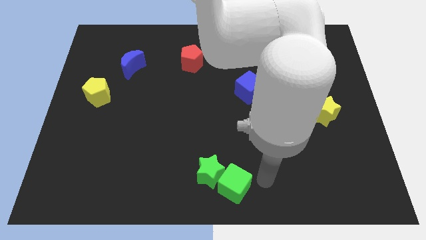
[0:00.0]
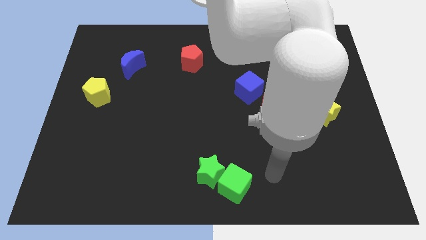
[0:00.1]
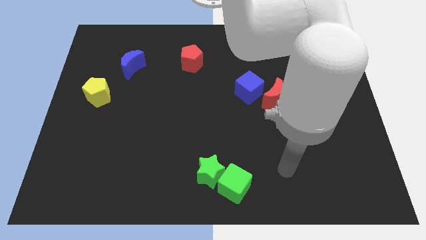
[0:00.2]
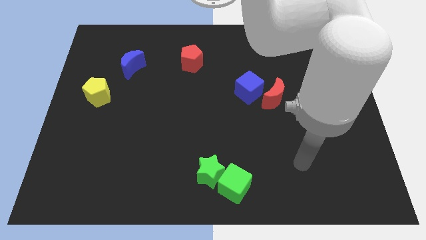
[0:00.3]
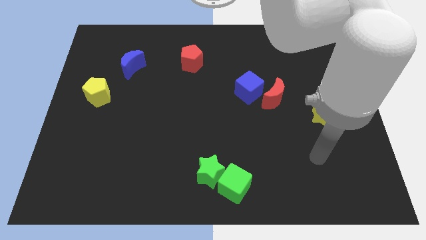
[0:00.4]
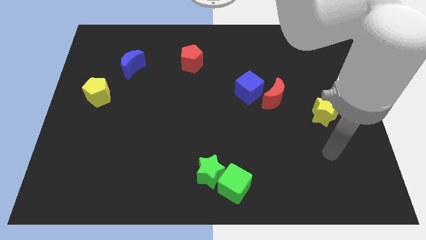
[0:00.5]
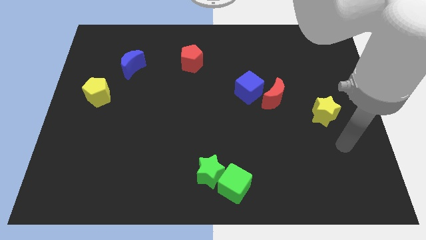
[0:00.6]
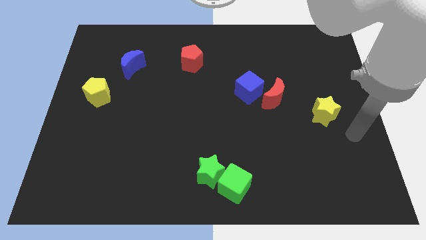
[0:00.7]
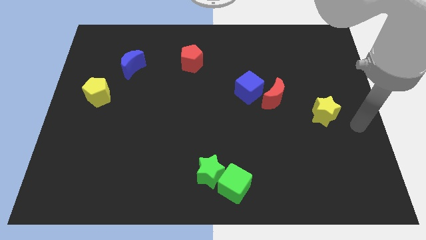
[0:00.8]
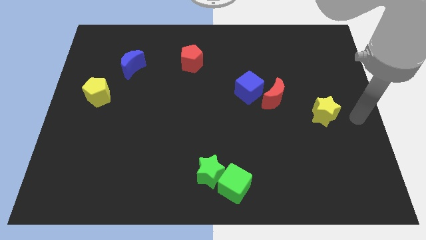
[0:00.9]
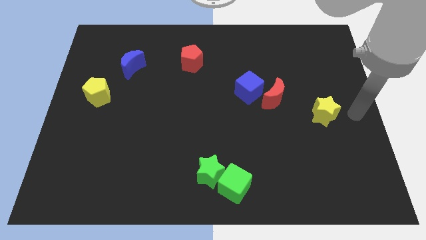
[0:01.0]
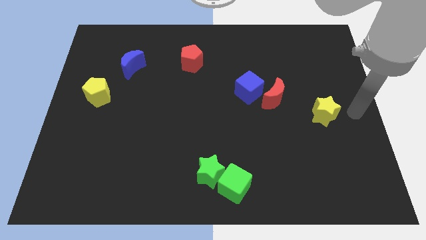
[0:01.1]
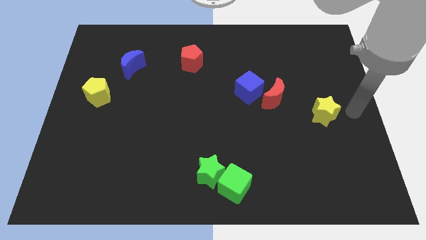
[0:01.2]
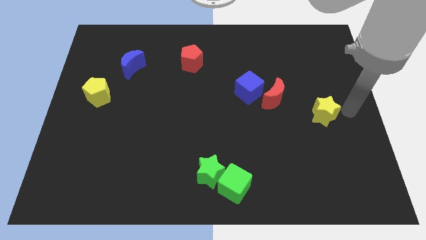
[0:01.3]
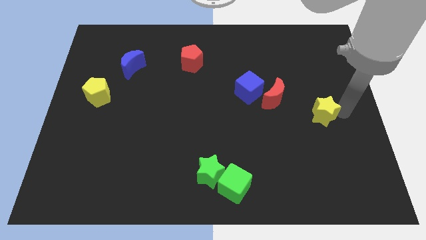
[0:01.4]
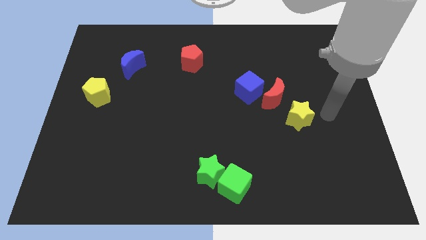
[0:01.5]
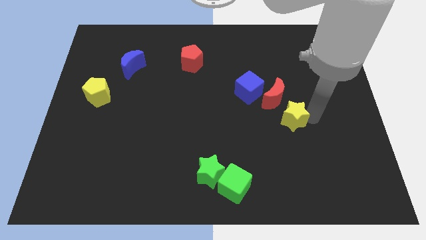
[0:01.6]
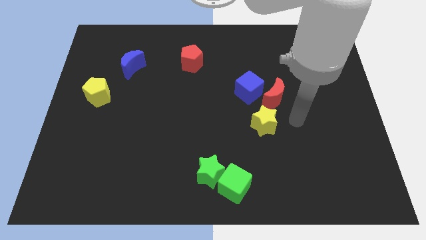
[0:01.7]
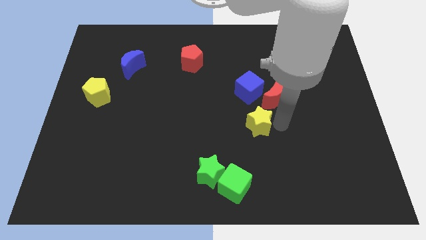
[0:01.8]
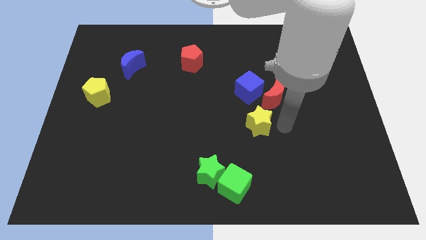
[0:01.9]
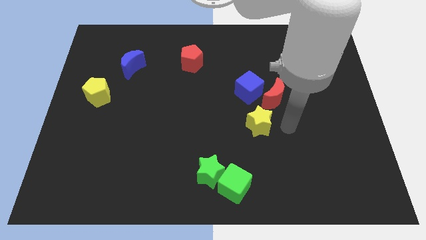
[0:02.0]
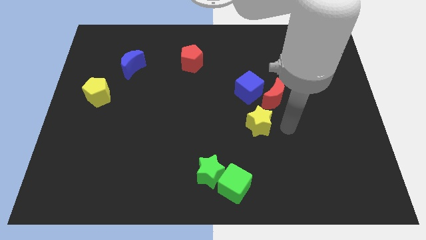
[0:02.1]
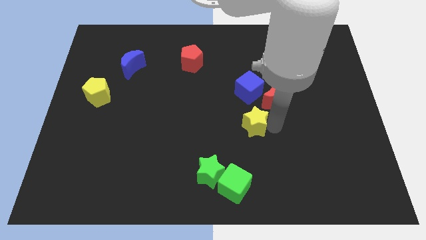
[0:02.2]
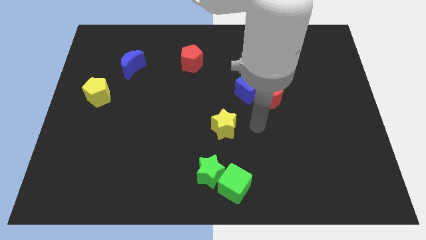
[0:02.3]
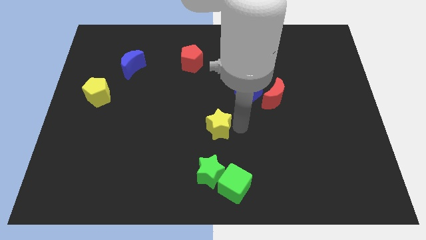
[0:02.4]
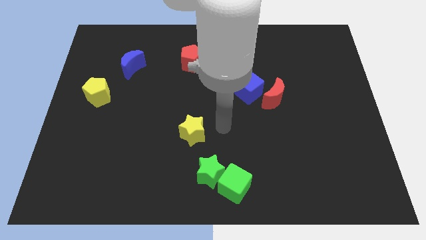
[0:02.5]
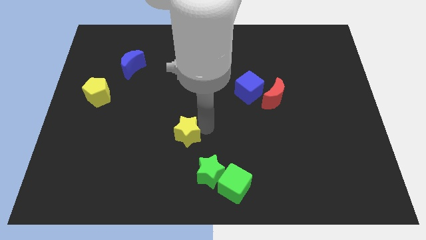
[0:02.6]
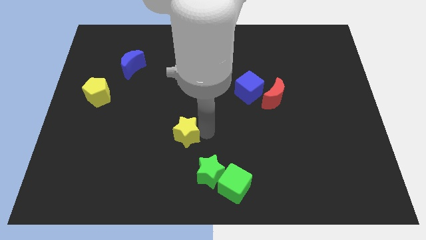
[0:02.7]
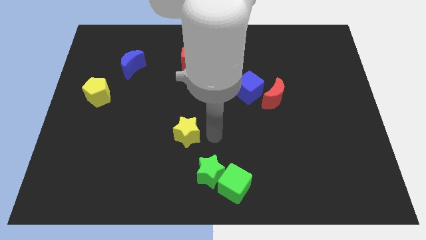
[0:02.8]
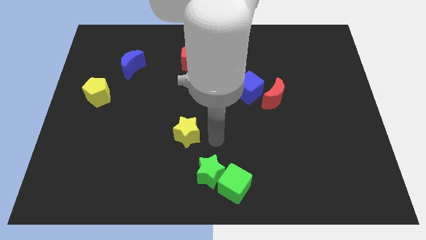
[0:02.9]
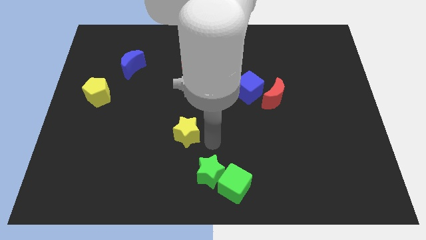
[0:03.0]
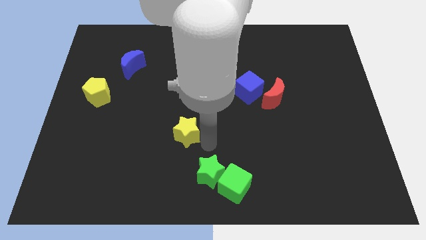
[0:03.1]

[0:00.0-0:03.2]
move yellow star to the top left of green star

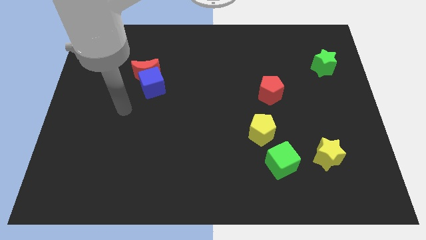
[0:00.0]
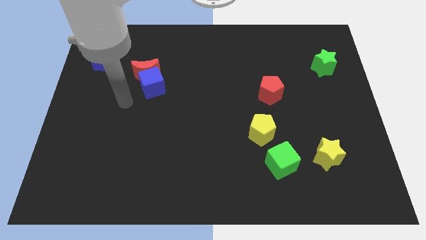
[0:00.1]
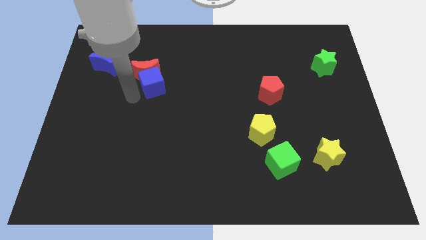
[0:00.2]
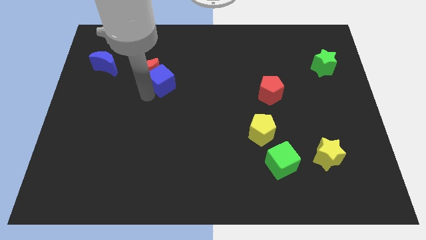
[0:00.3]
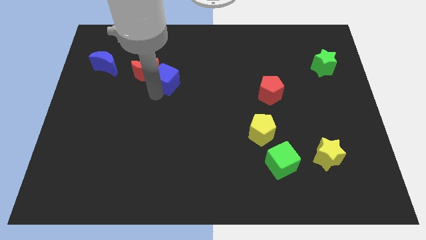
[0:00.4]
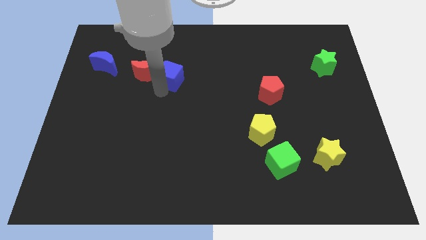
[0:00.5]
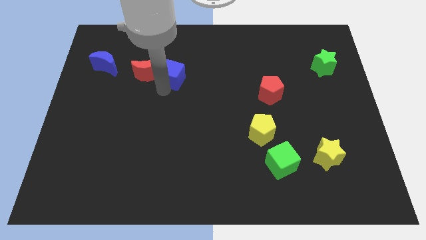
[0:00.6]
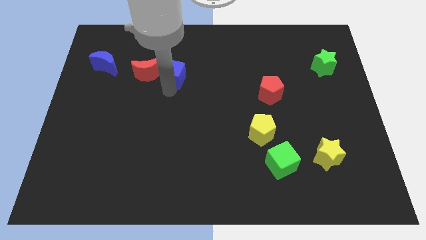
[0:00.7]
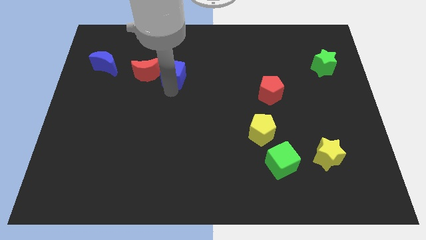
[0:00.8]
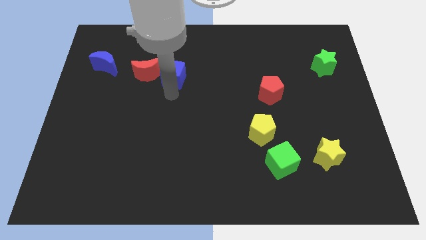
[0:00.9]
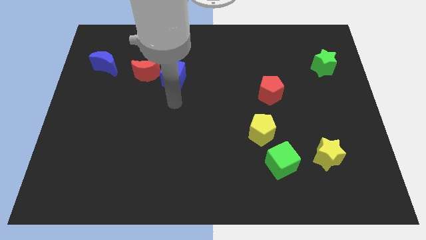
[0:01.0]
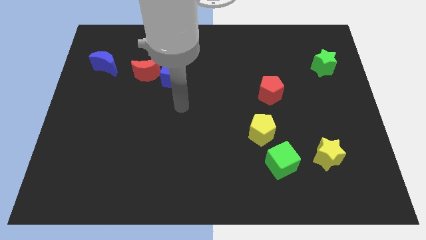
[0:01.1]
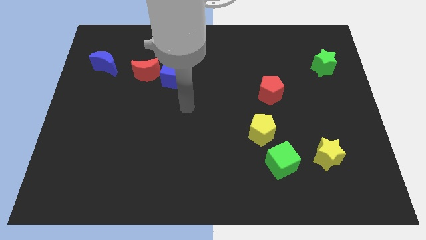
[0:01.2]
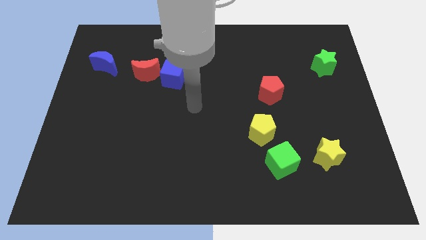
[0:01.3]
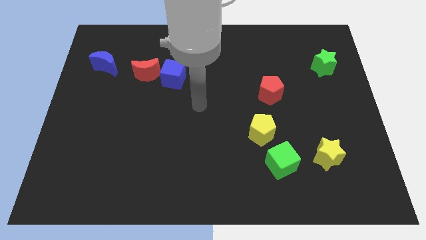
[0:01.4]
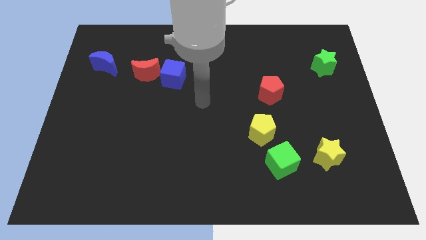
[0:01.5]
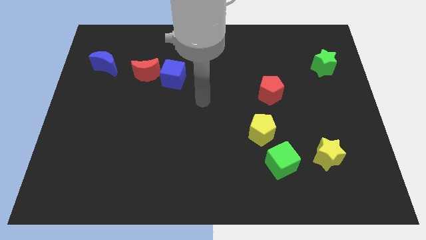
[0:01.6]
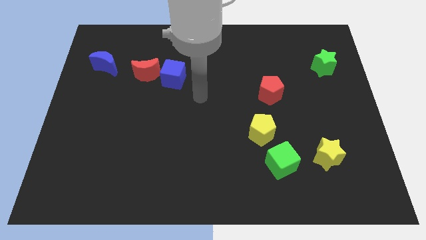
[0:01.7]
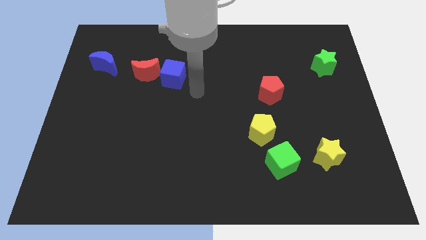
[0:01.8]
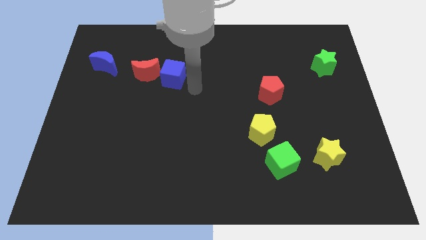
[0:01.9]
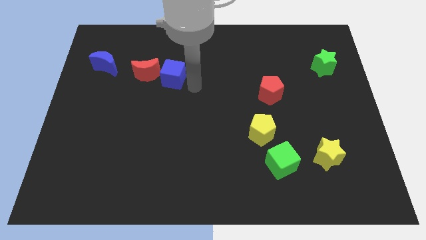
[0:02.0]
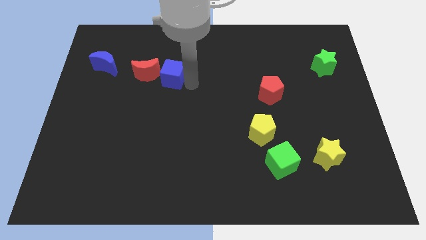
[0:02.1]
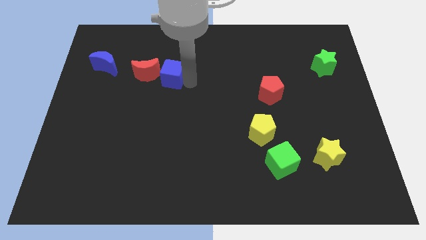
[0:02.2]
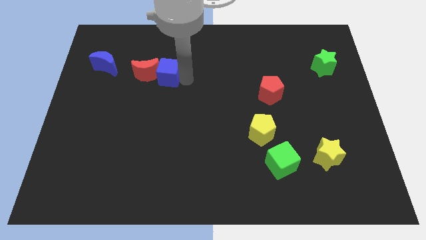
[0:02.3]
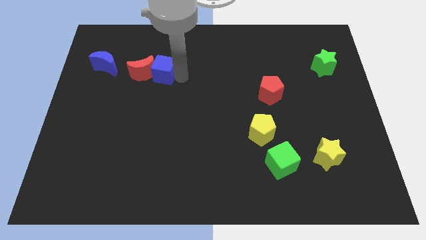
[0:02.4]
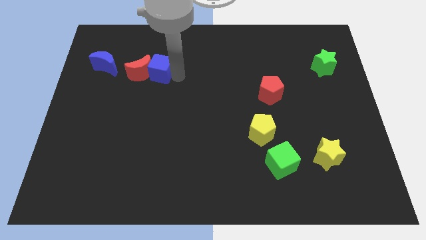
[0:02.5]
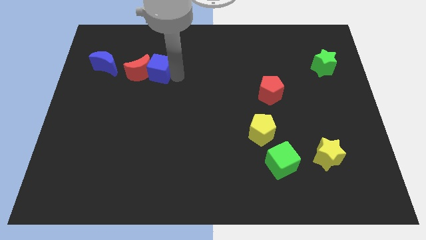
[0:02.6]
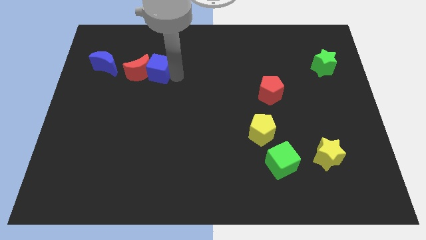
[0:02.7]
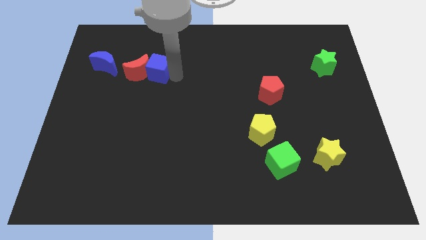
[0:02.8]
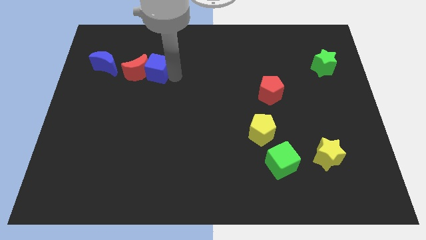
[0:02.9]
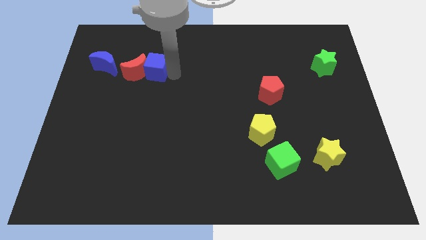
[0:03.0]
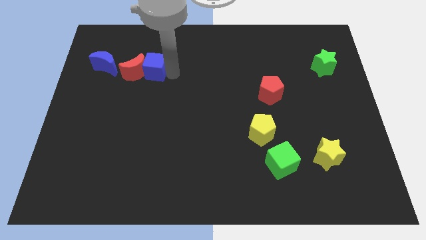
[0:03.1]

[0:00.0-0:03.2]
move the blue cube and red moon to the right of the blue moon

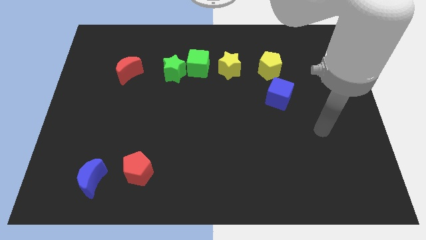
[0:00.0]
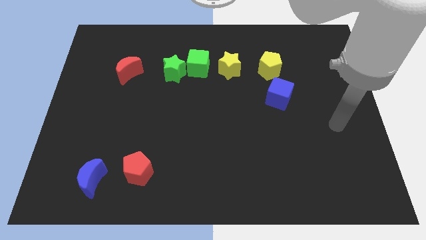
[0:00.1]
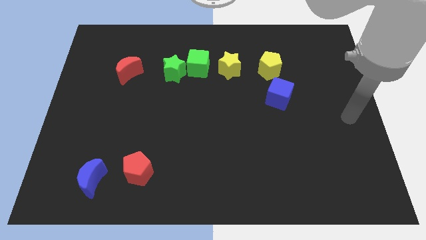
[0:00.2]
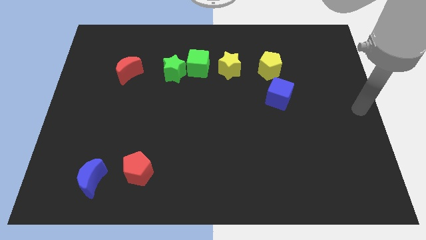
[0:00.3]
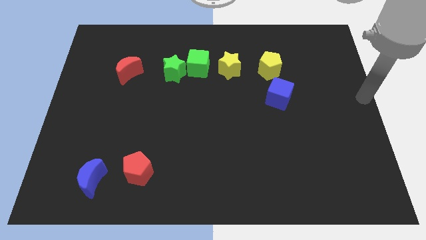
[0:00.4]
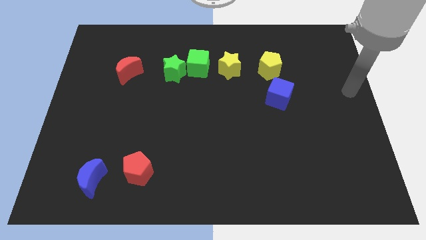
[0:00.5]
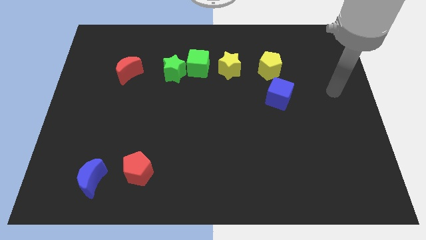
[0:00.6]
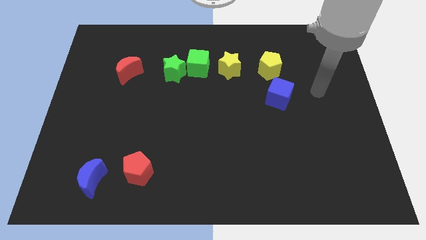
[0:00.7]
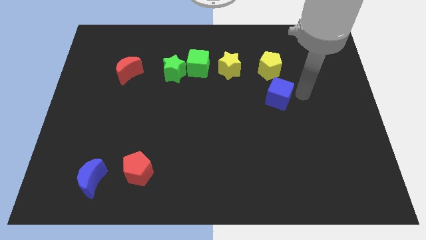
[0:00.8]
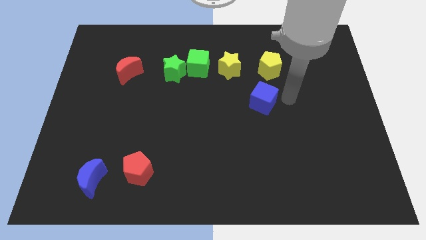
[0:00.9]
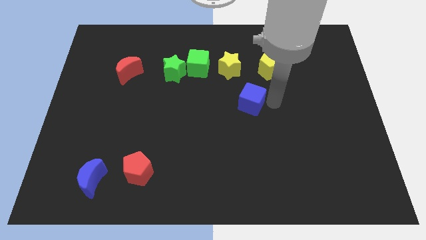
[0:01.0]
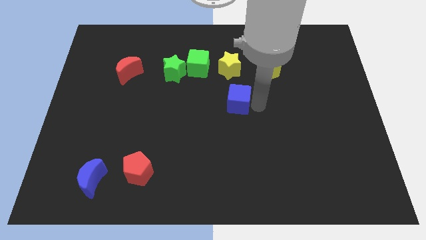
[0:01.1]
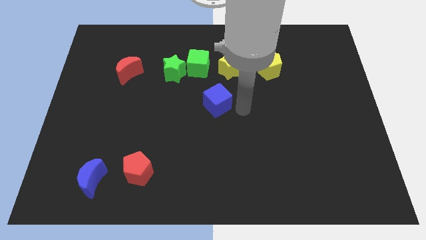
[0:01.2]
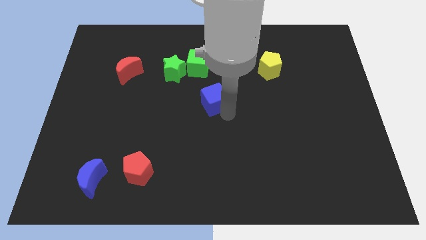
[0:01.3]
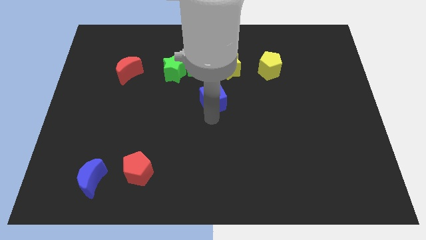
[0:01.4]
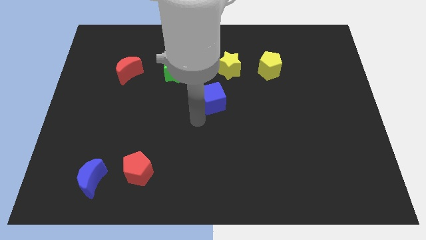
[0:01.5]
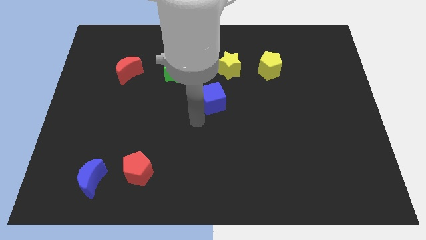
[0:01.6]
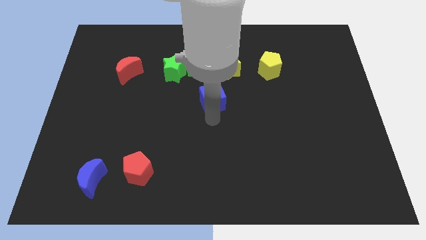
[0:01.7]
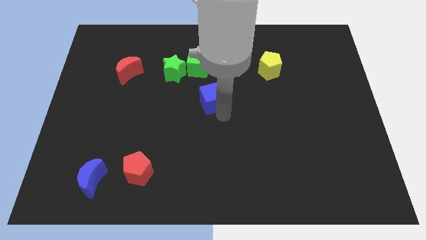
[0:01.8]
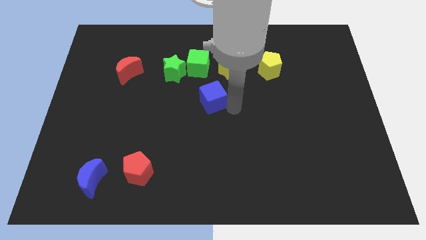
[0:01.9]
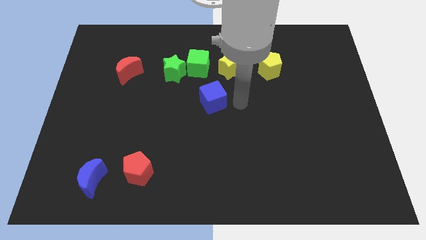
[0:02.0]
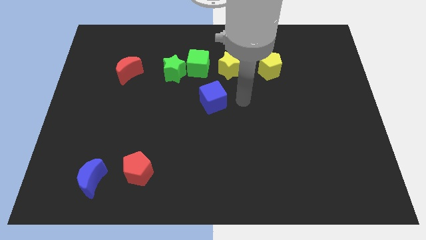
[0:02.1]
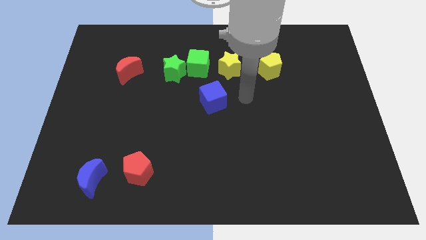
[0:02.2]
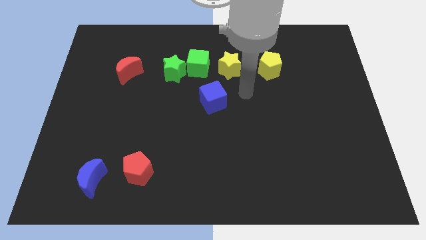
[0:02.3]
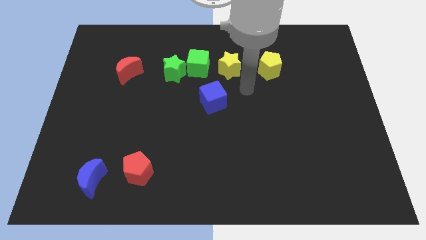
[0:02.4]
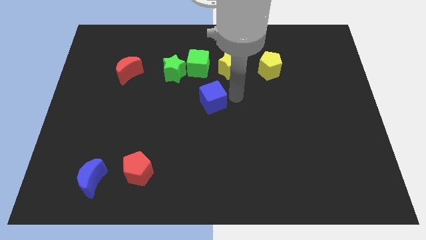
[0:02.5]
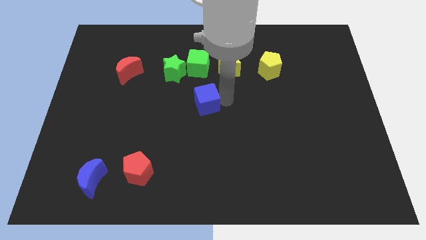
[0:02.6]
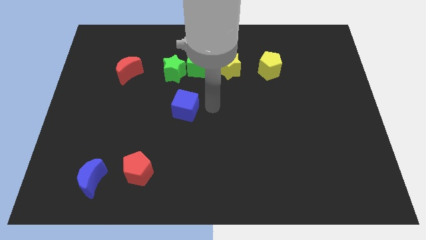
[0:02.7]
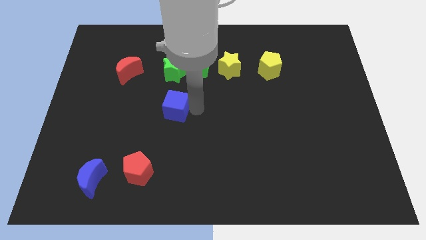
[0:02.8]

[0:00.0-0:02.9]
move blue cube below green star
